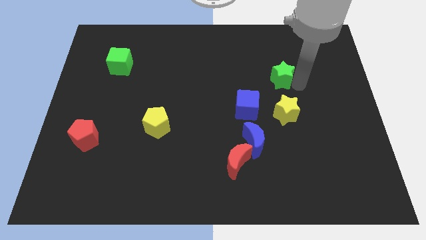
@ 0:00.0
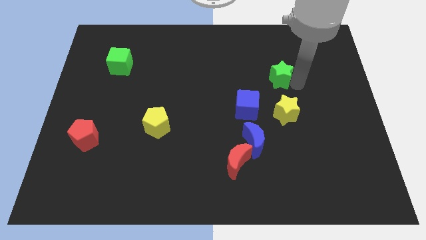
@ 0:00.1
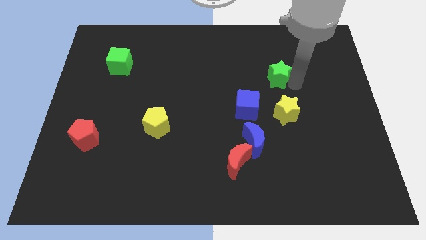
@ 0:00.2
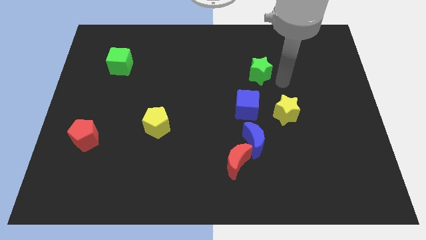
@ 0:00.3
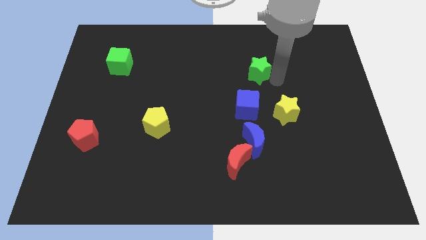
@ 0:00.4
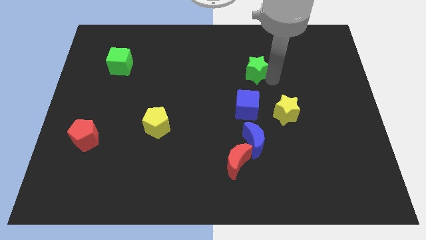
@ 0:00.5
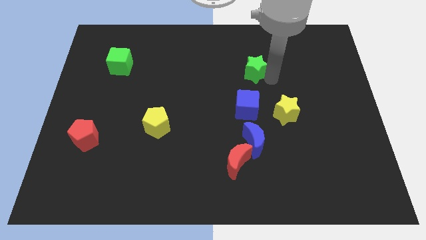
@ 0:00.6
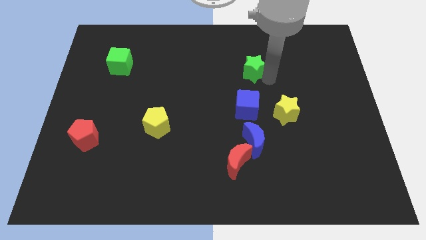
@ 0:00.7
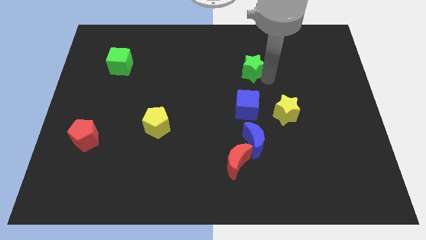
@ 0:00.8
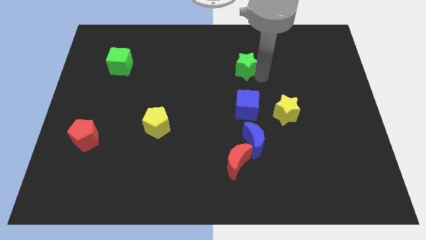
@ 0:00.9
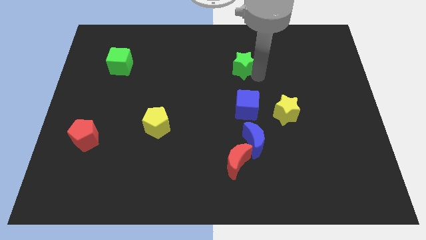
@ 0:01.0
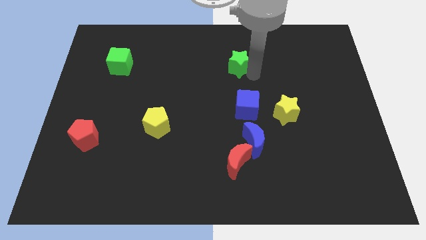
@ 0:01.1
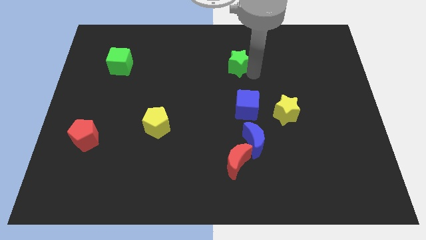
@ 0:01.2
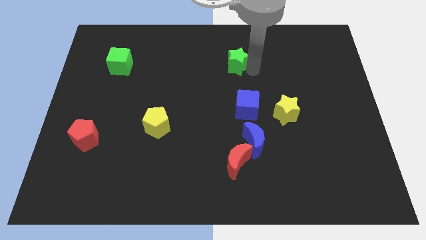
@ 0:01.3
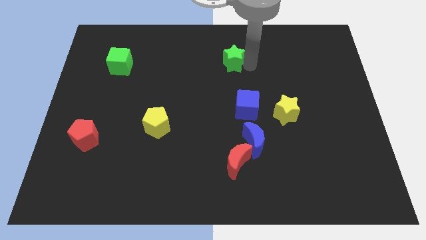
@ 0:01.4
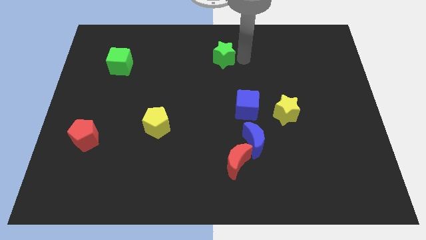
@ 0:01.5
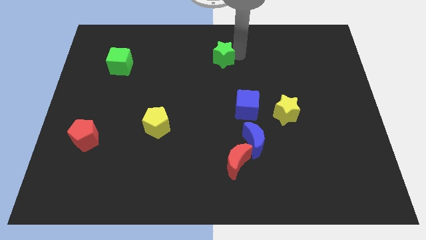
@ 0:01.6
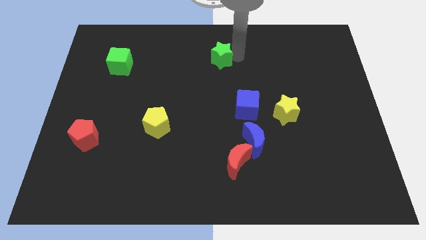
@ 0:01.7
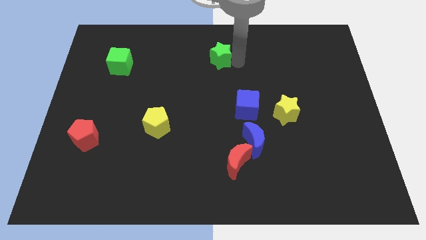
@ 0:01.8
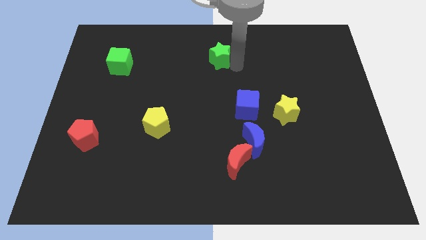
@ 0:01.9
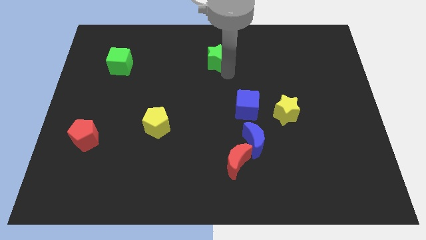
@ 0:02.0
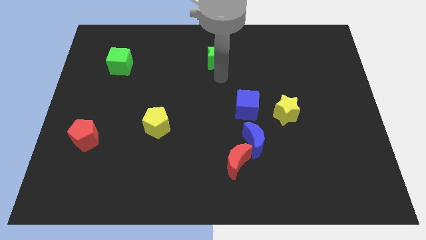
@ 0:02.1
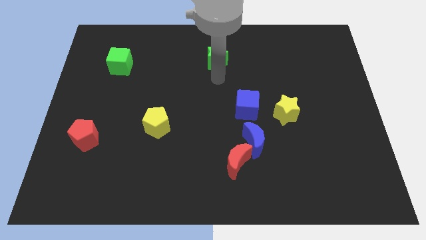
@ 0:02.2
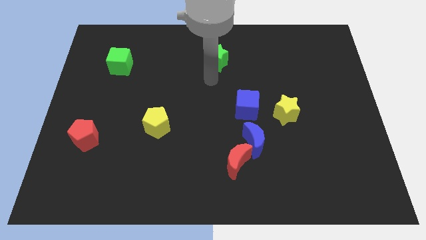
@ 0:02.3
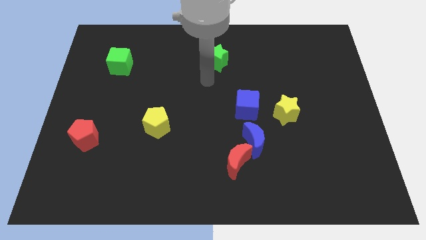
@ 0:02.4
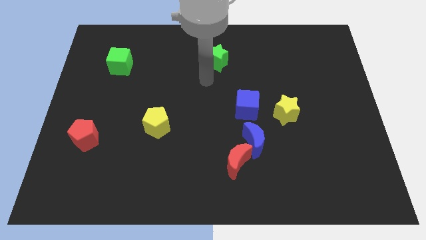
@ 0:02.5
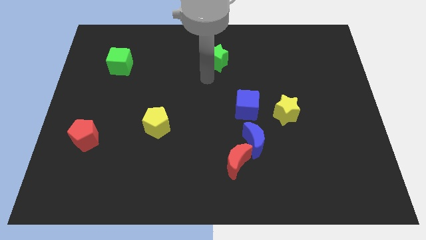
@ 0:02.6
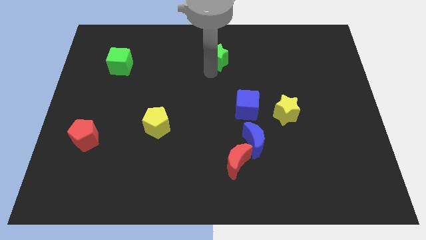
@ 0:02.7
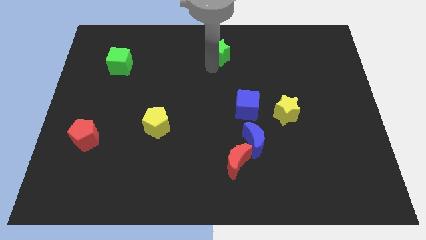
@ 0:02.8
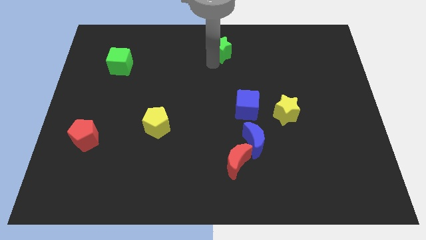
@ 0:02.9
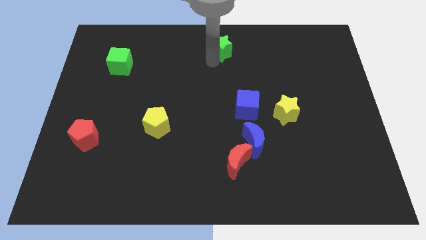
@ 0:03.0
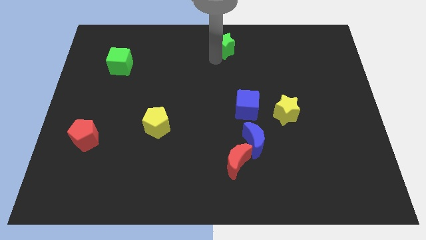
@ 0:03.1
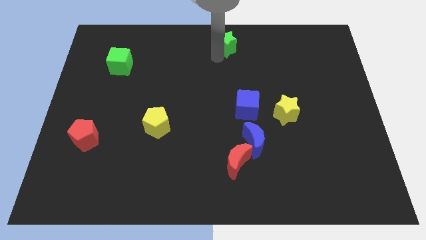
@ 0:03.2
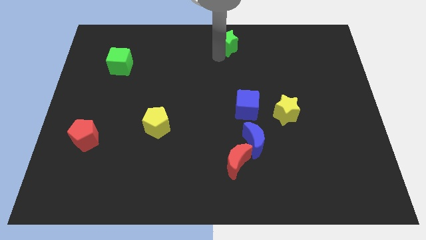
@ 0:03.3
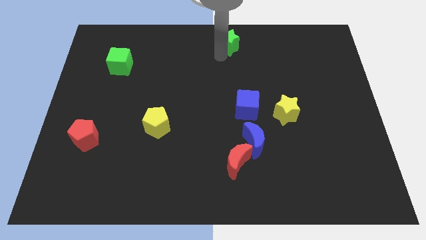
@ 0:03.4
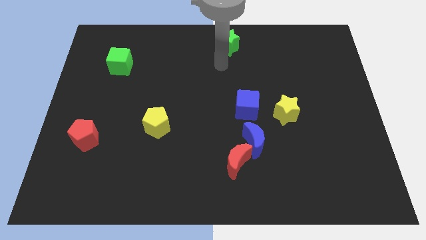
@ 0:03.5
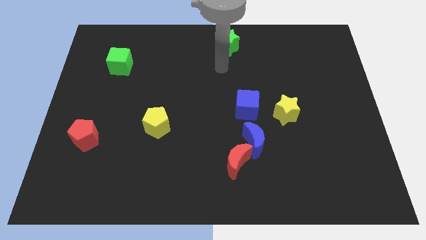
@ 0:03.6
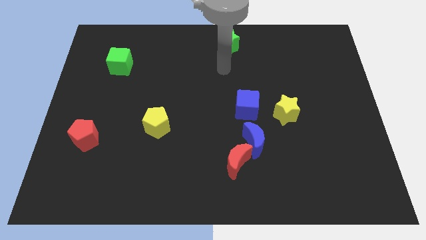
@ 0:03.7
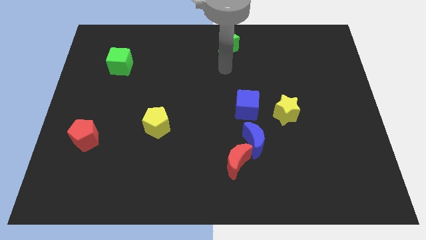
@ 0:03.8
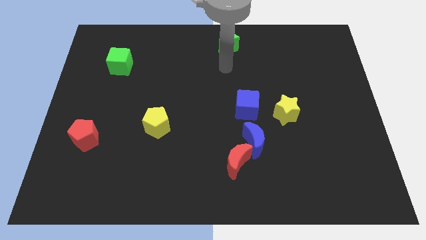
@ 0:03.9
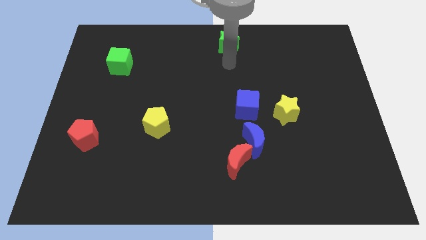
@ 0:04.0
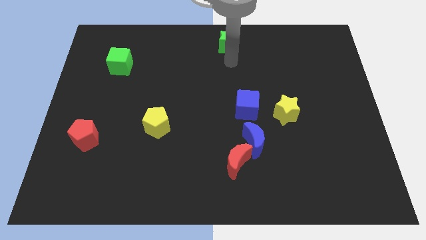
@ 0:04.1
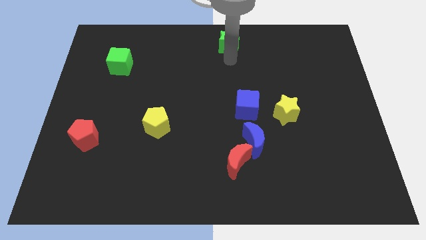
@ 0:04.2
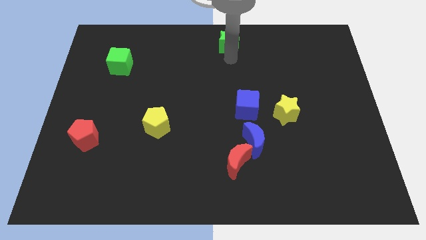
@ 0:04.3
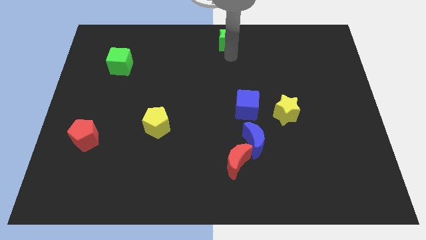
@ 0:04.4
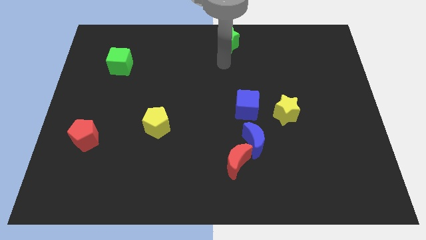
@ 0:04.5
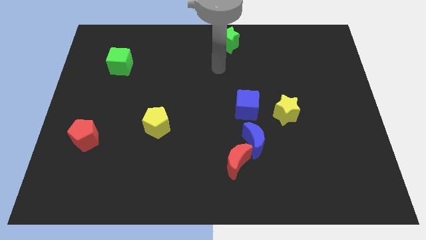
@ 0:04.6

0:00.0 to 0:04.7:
put the green star to the top center of the board

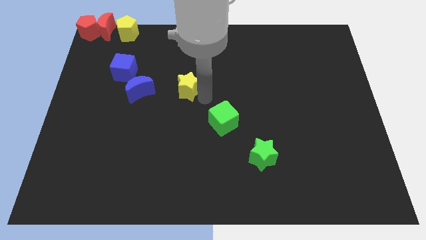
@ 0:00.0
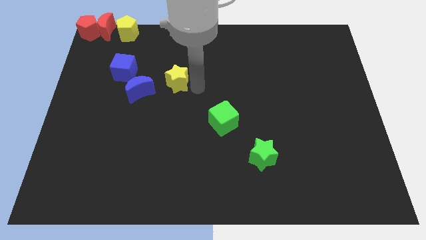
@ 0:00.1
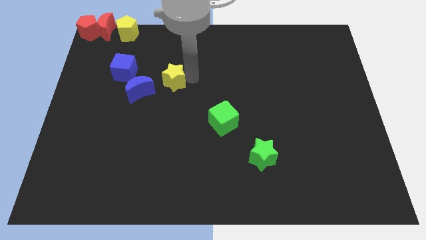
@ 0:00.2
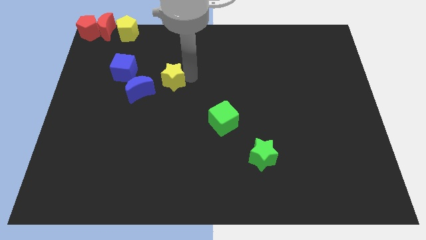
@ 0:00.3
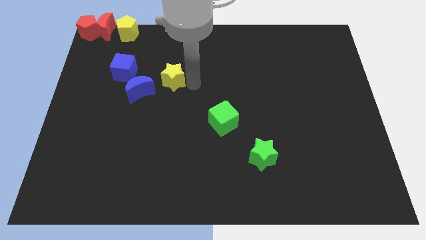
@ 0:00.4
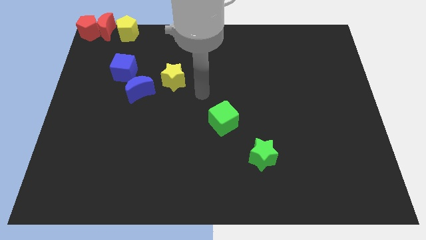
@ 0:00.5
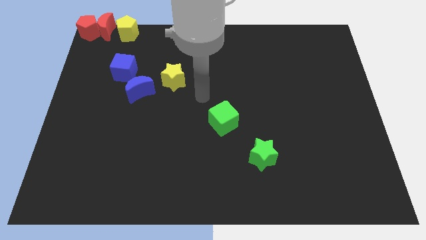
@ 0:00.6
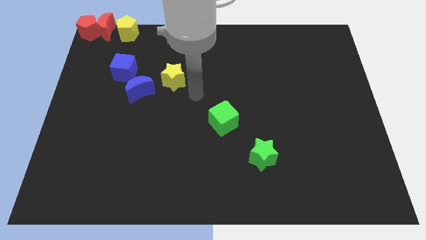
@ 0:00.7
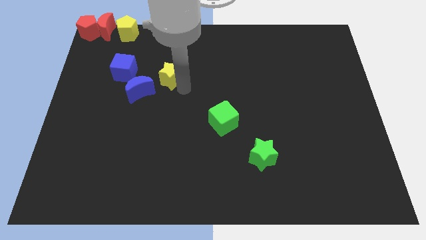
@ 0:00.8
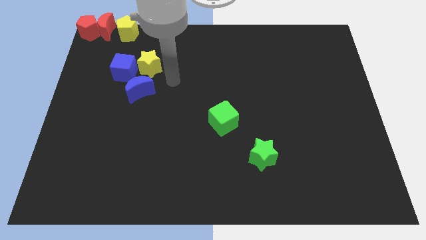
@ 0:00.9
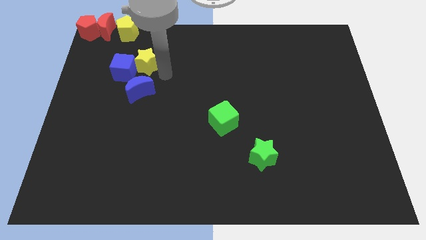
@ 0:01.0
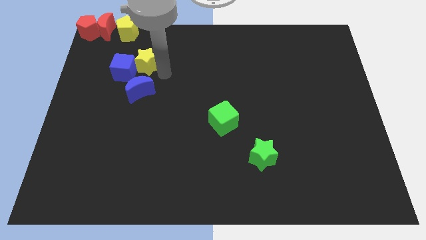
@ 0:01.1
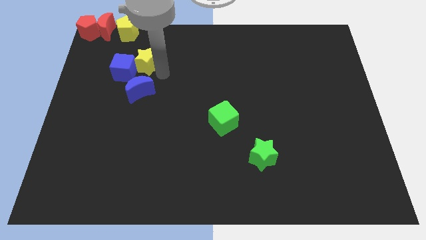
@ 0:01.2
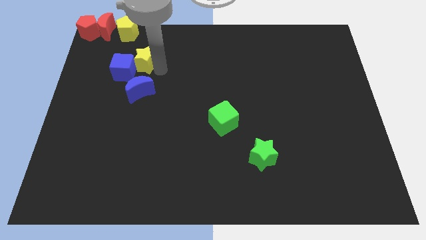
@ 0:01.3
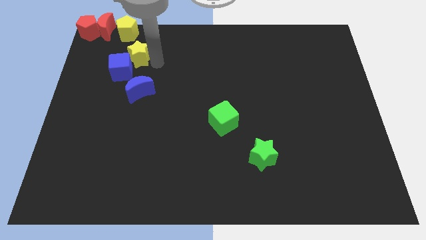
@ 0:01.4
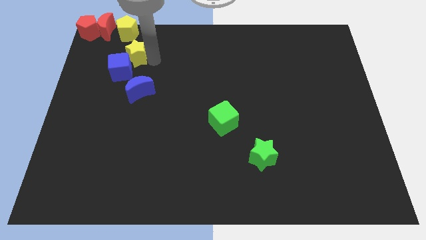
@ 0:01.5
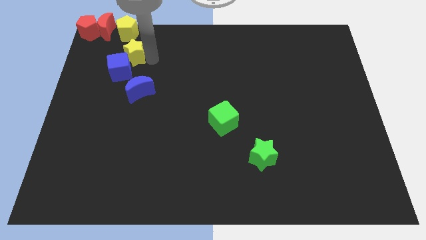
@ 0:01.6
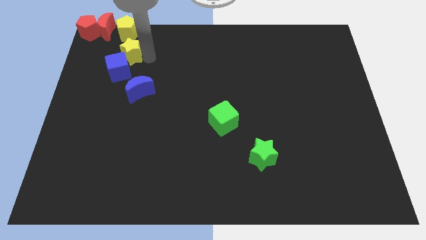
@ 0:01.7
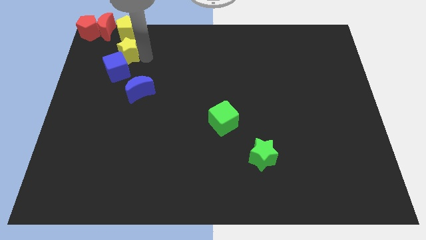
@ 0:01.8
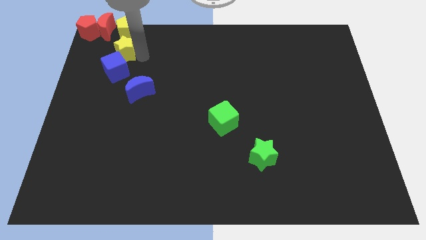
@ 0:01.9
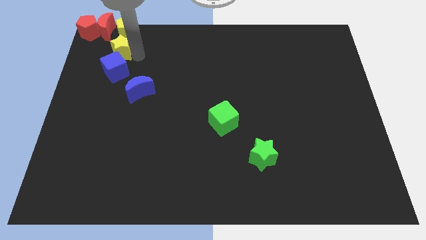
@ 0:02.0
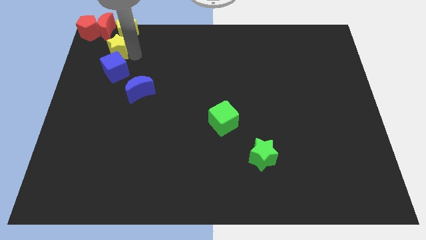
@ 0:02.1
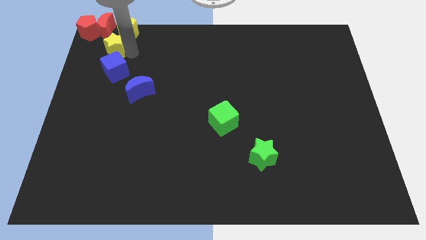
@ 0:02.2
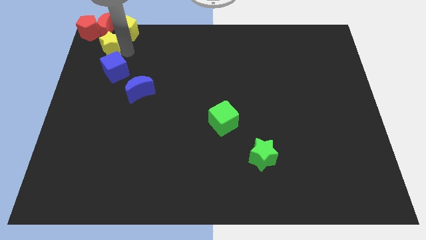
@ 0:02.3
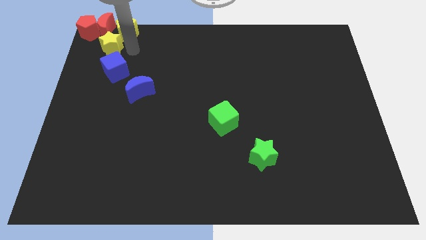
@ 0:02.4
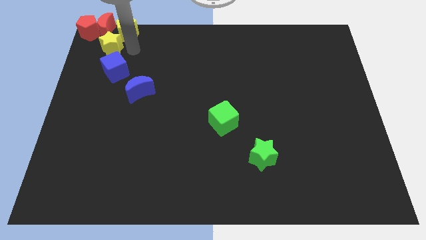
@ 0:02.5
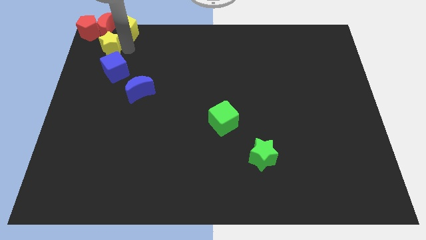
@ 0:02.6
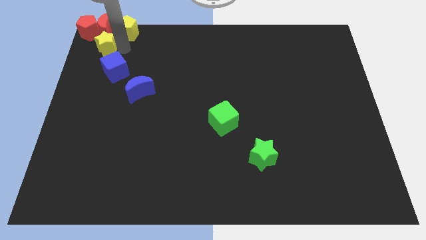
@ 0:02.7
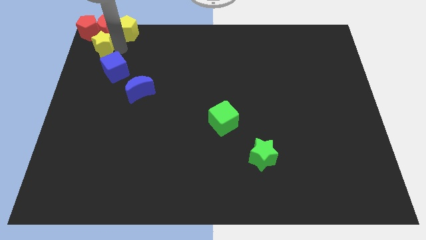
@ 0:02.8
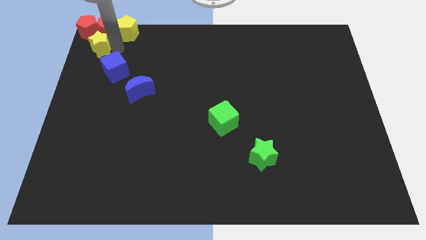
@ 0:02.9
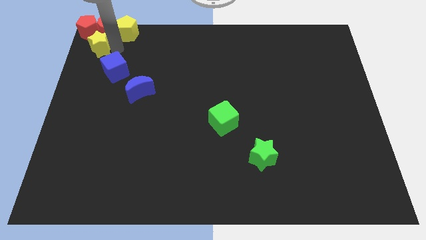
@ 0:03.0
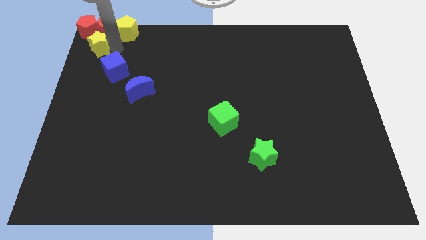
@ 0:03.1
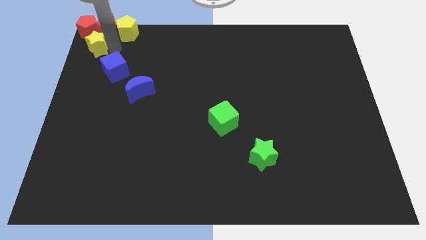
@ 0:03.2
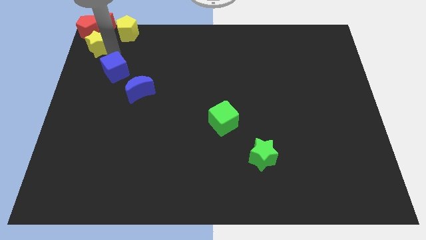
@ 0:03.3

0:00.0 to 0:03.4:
drag the yellow star into the group of red blocks and yellow pentagon

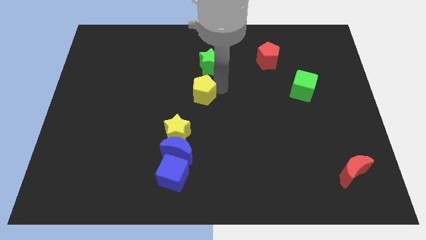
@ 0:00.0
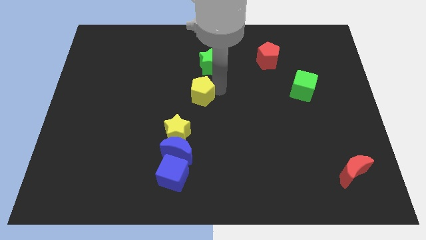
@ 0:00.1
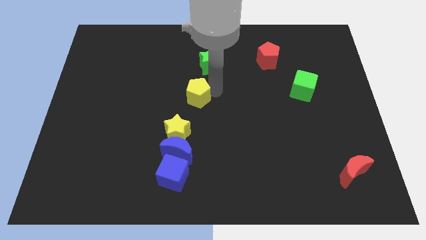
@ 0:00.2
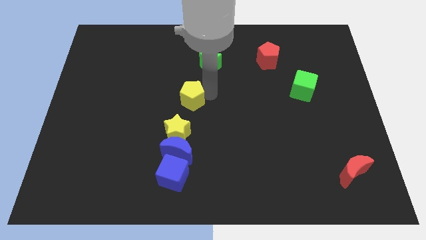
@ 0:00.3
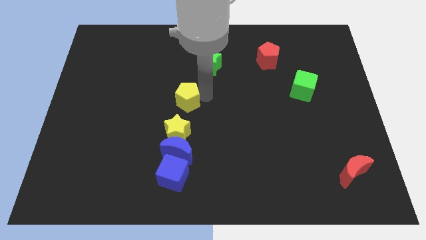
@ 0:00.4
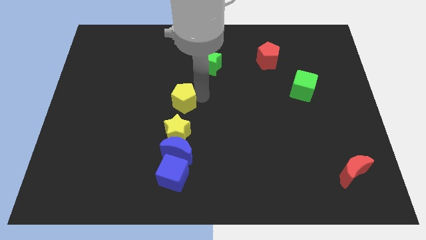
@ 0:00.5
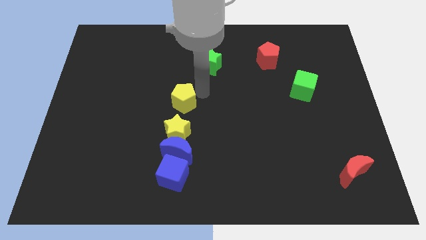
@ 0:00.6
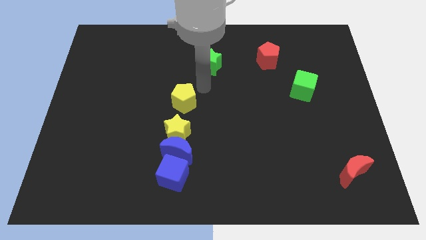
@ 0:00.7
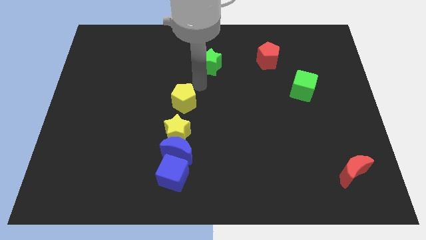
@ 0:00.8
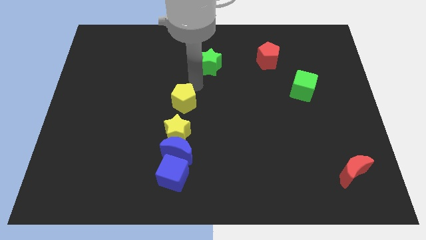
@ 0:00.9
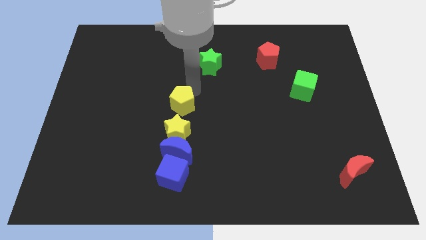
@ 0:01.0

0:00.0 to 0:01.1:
place the yellow pentagon above the yellow star
